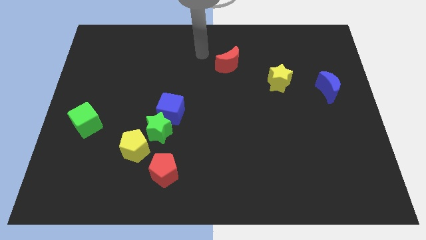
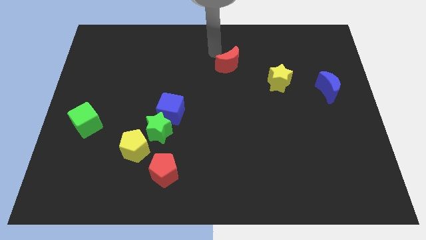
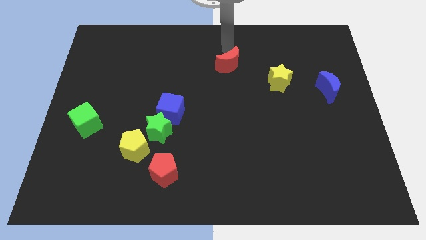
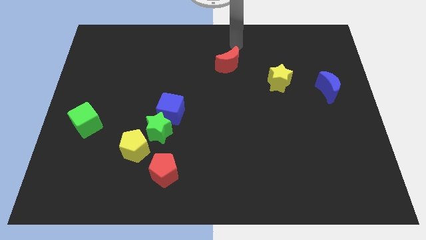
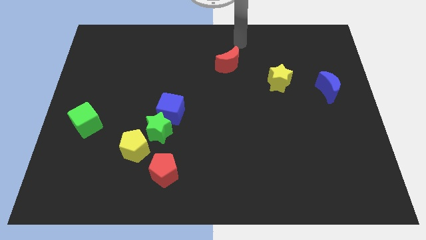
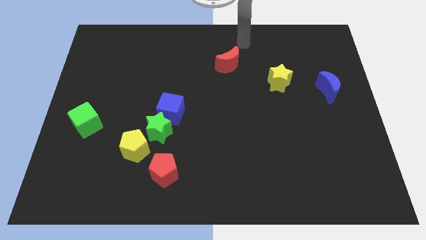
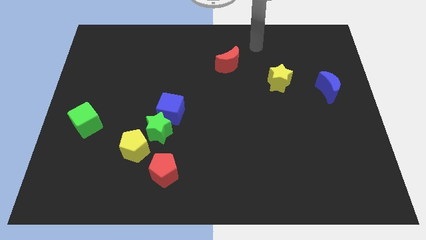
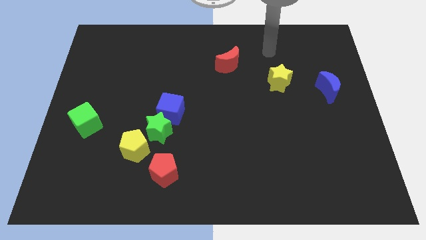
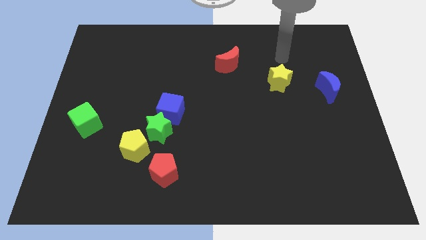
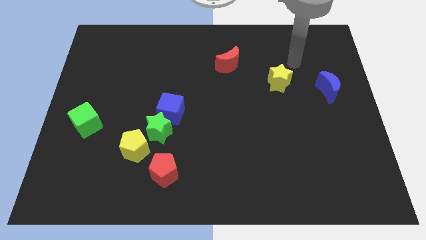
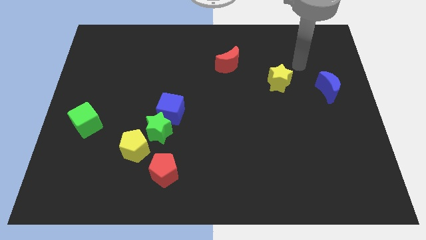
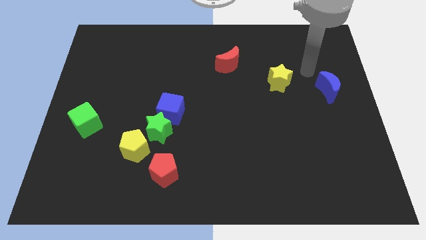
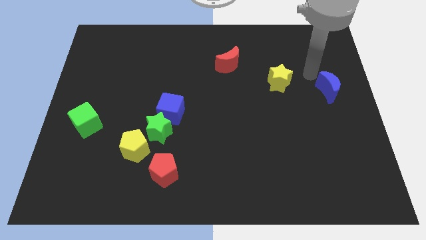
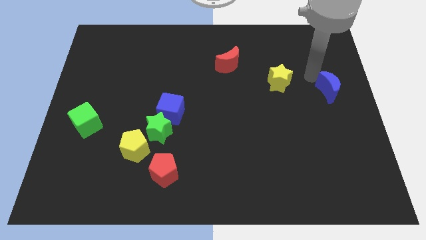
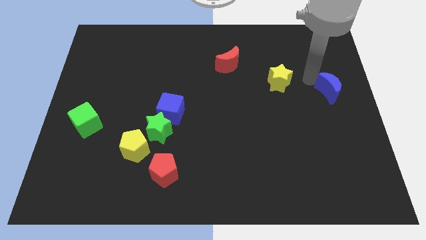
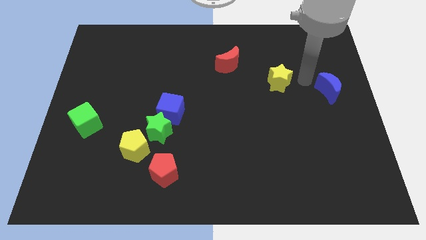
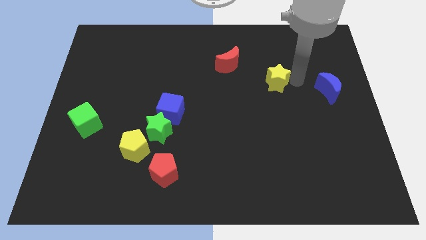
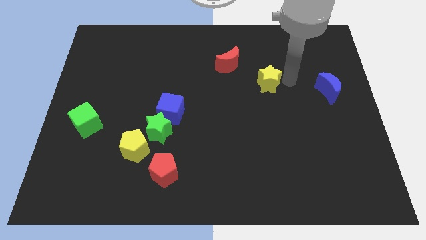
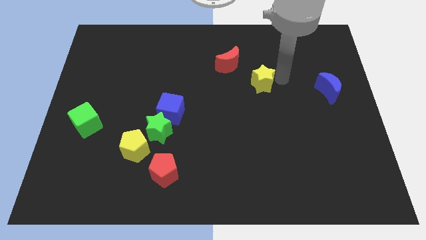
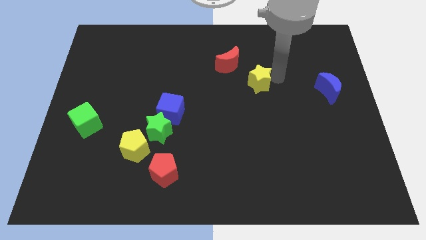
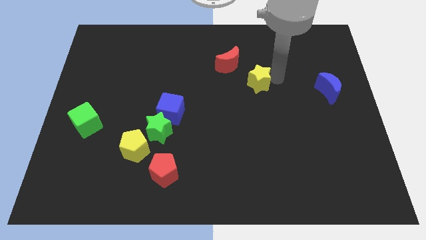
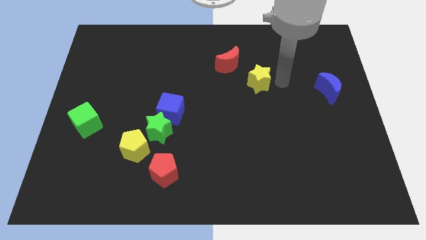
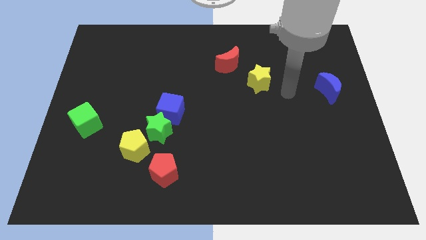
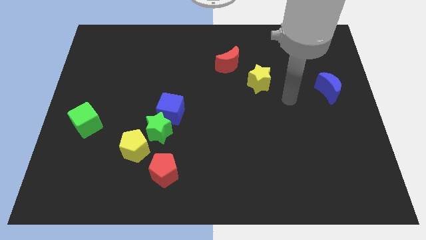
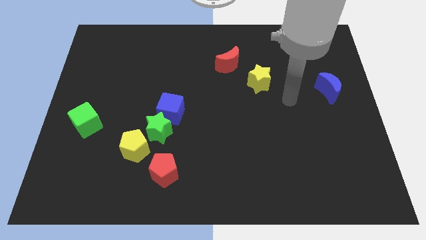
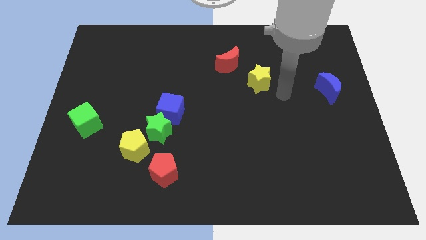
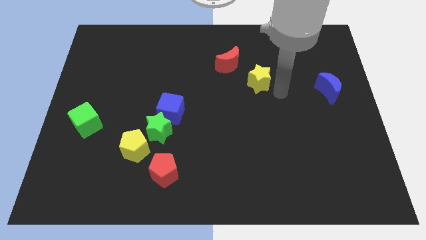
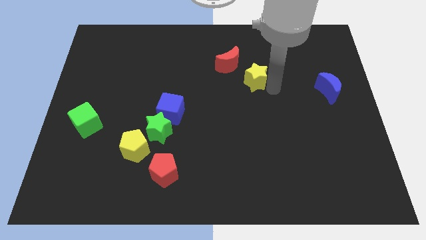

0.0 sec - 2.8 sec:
place arm near yellow star

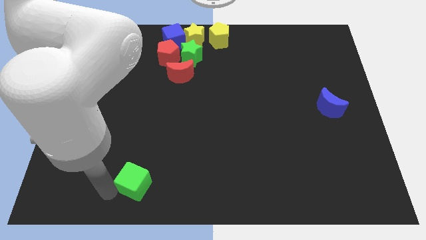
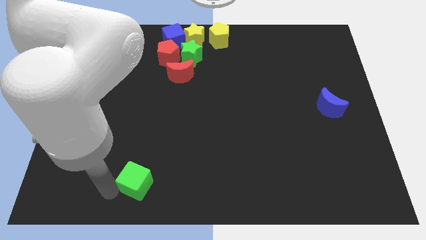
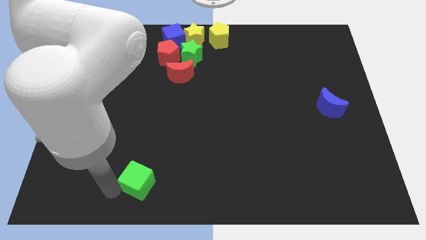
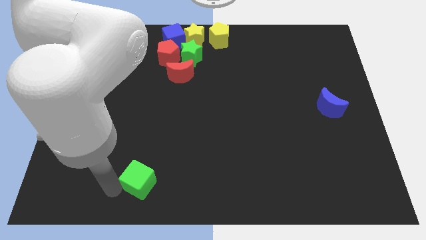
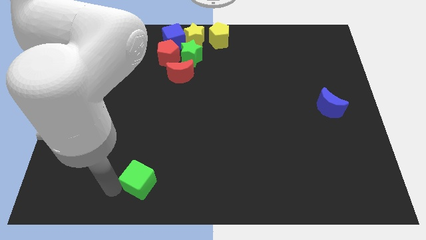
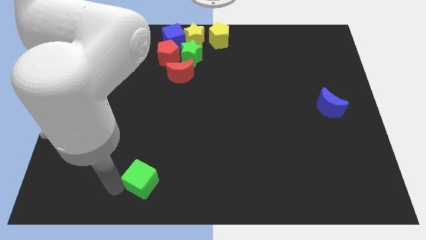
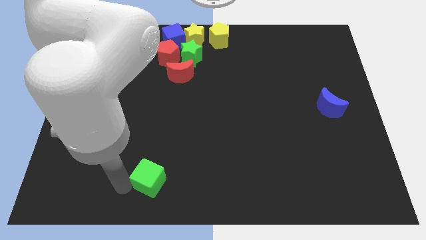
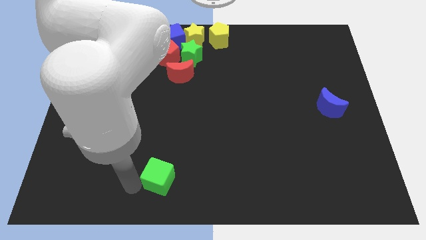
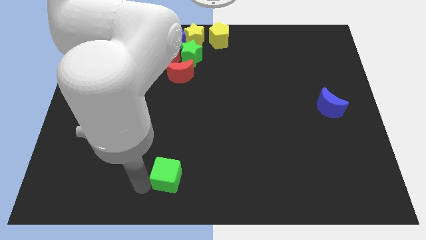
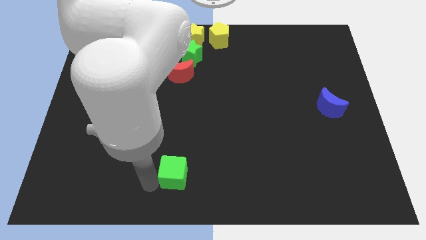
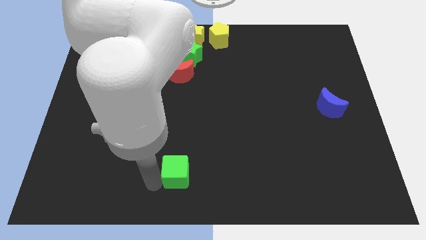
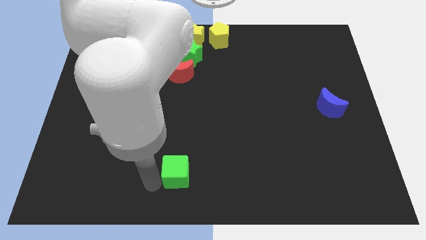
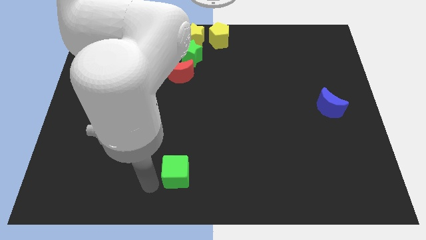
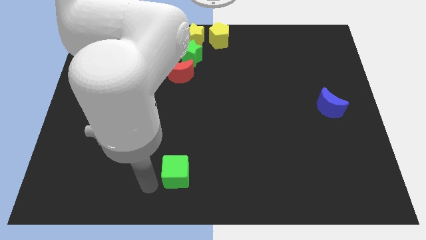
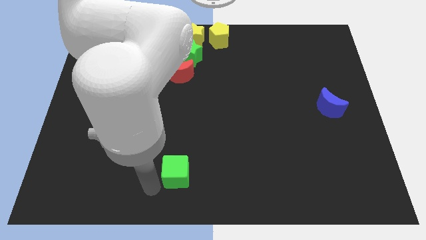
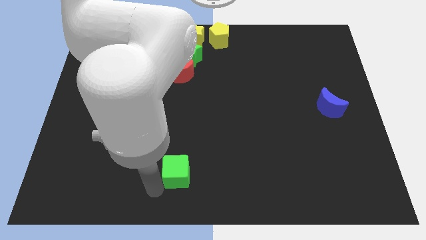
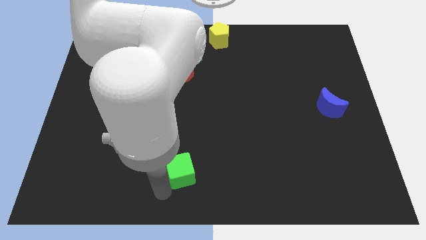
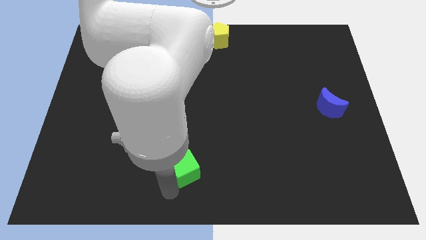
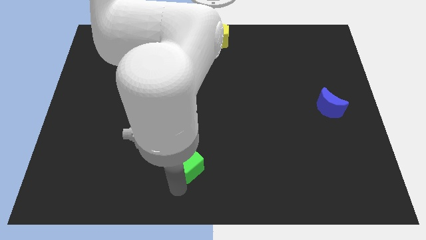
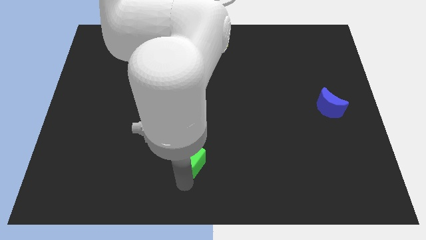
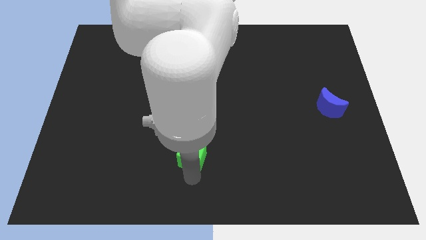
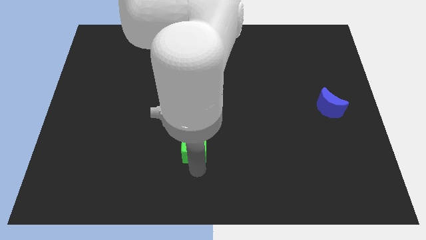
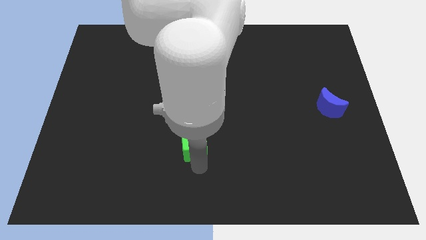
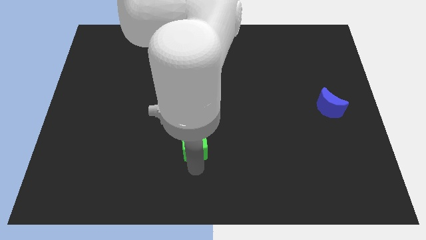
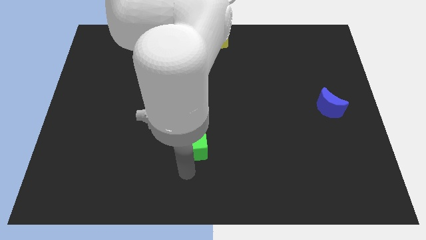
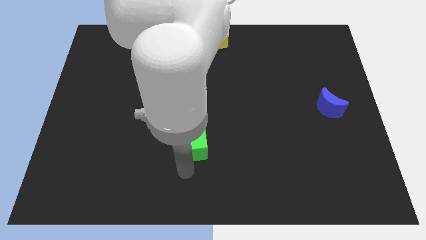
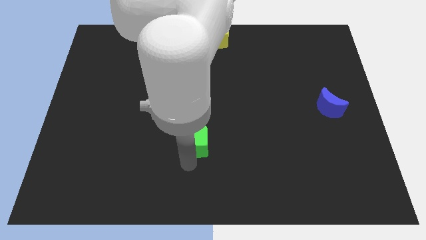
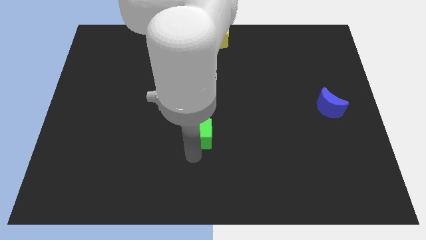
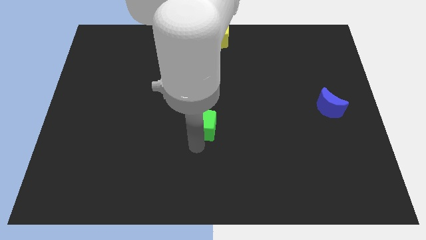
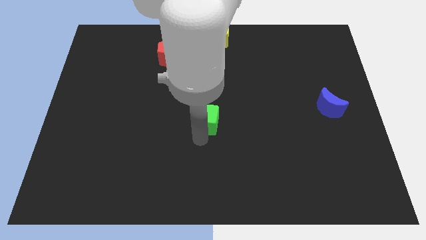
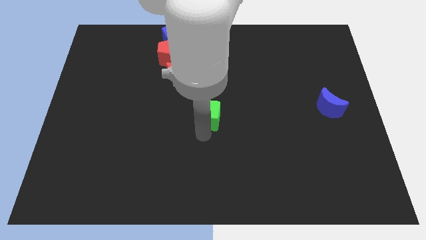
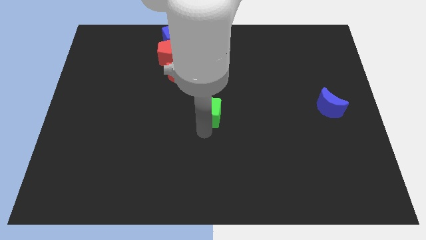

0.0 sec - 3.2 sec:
place the green cube at the center of the board

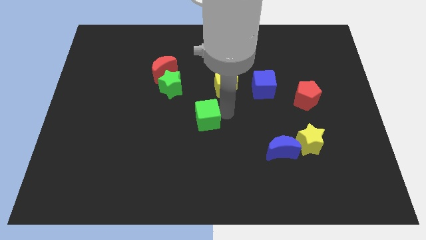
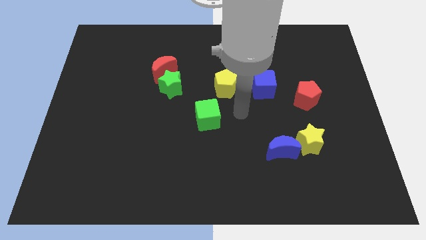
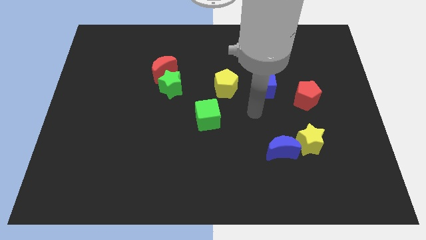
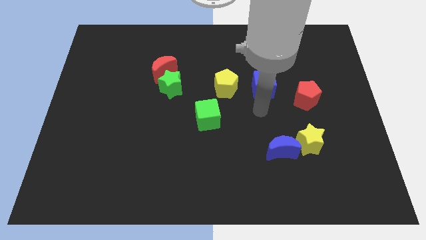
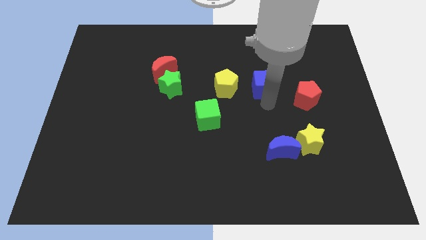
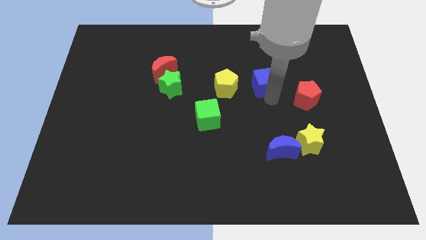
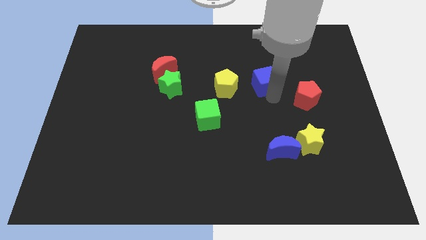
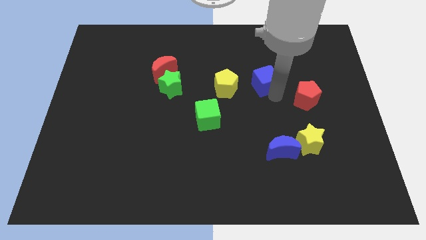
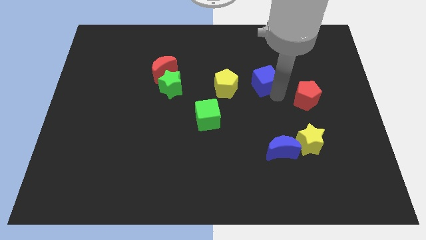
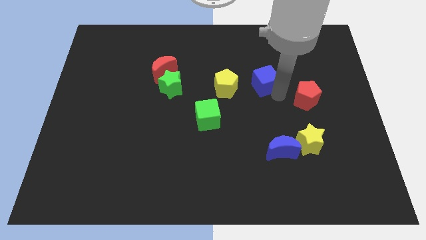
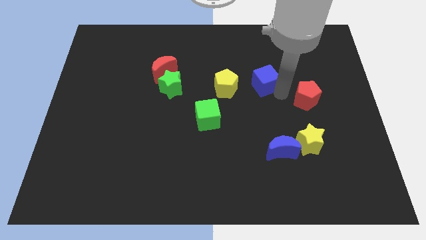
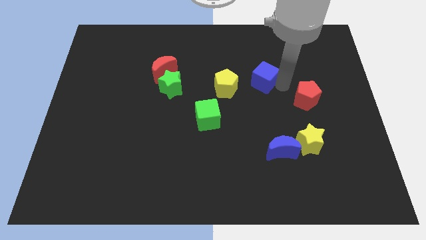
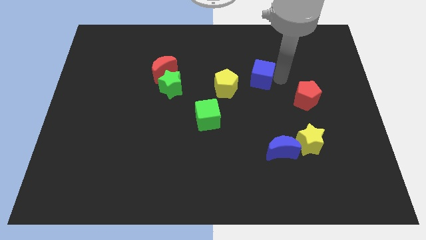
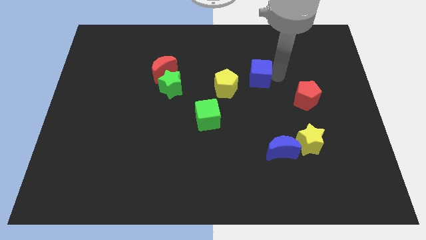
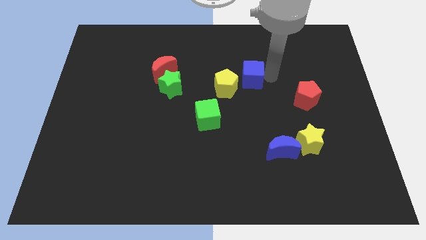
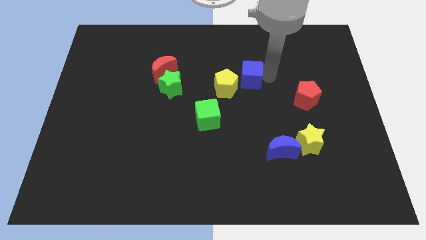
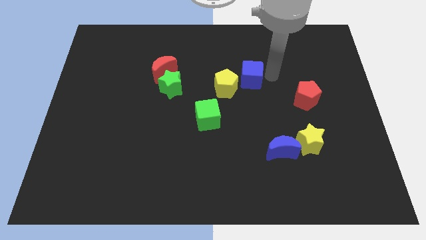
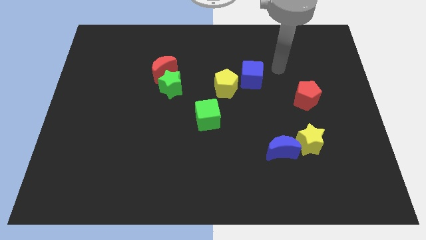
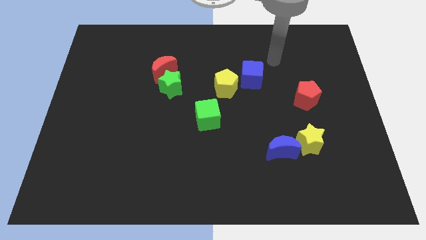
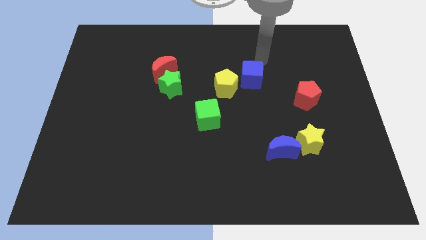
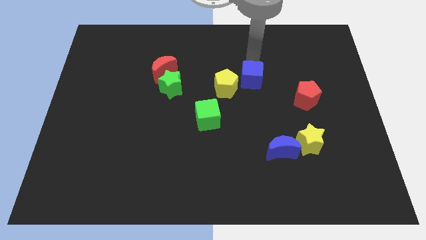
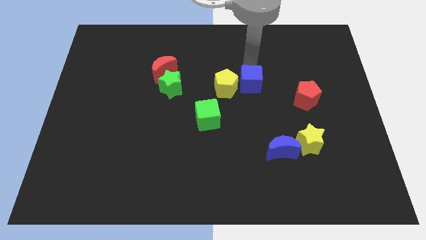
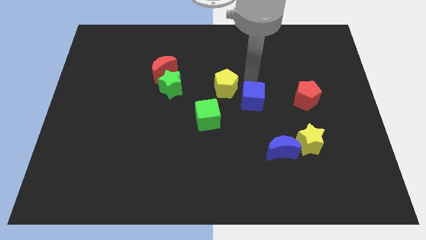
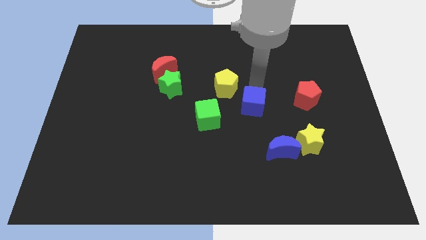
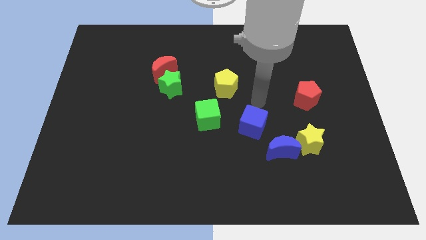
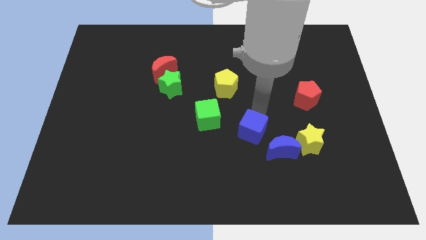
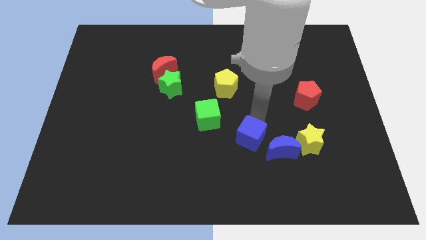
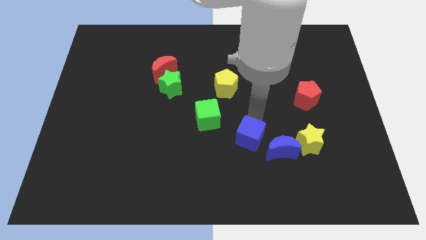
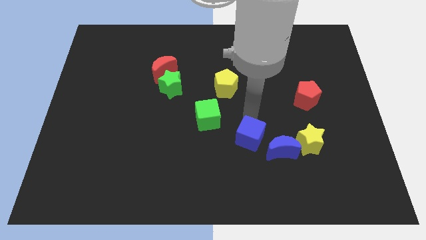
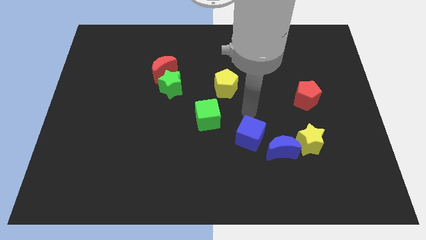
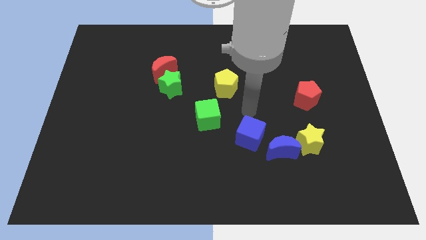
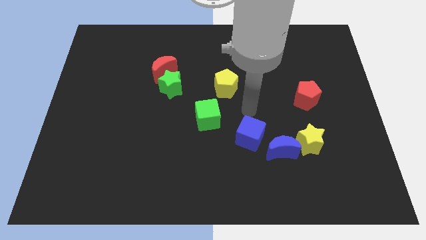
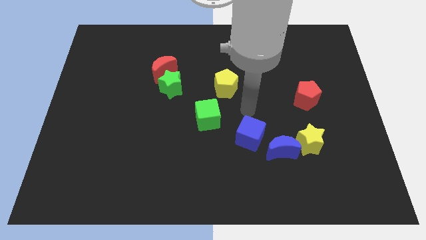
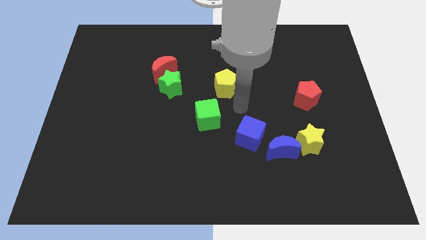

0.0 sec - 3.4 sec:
move the blue cube to the left of the blue crescent
